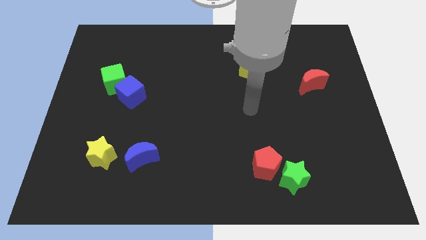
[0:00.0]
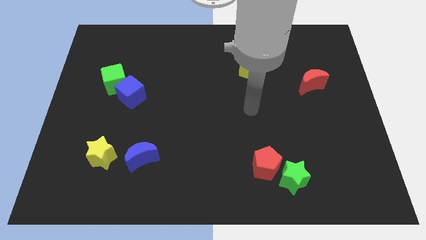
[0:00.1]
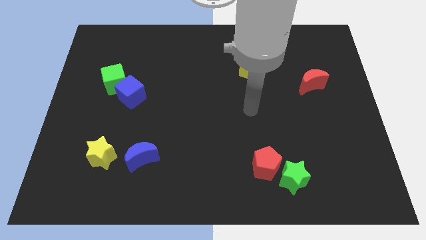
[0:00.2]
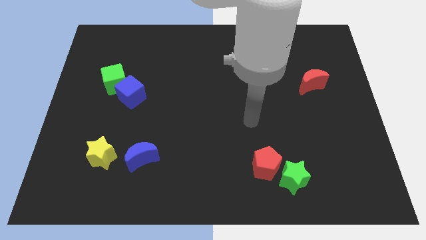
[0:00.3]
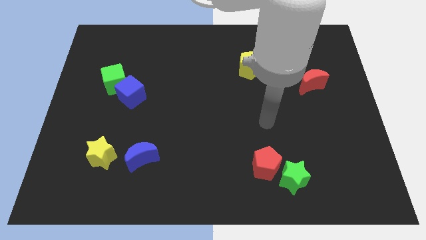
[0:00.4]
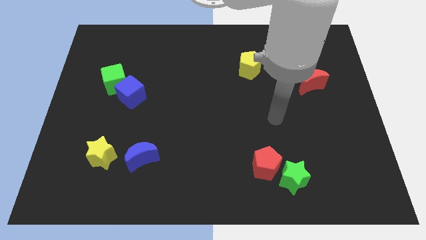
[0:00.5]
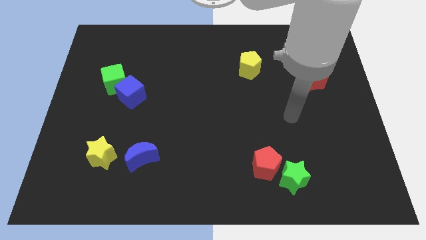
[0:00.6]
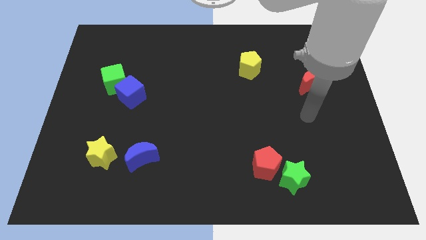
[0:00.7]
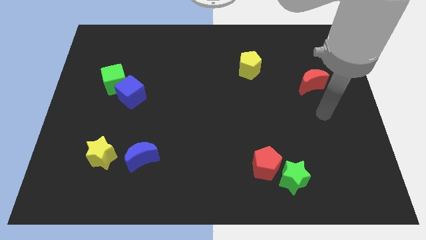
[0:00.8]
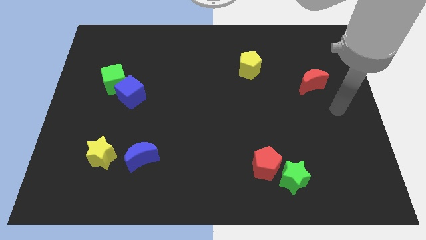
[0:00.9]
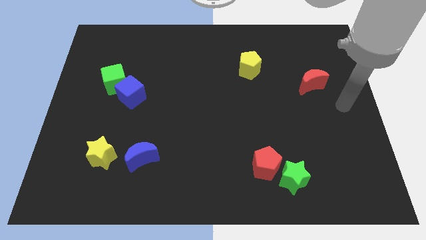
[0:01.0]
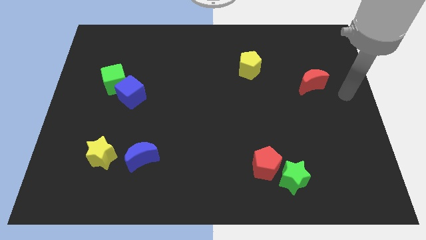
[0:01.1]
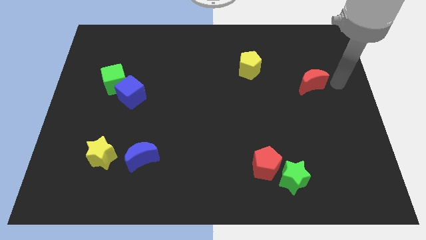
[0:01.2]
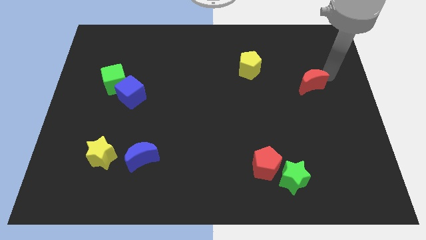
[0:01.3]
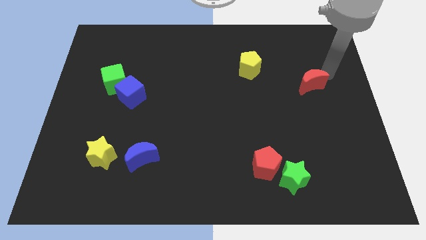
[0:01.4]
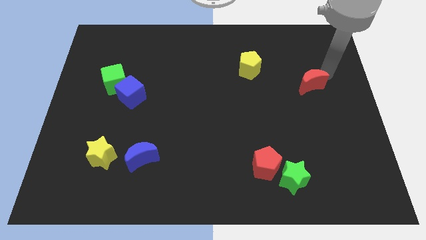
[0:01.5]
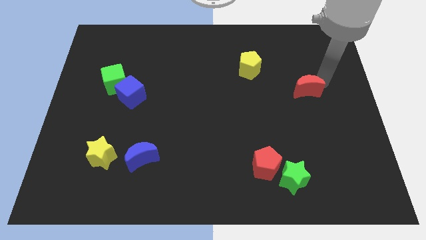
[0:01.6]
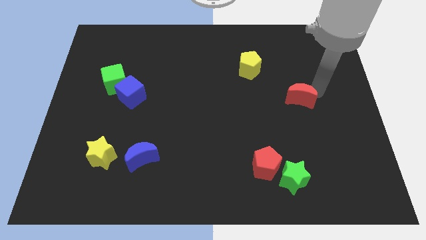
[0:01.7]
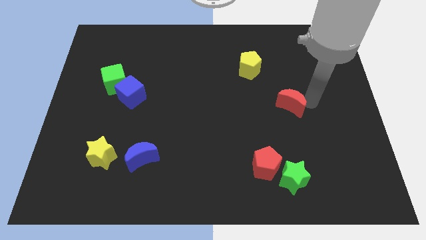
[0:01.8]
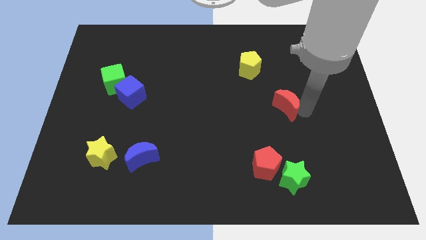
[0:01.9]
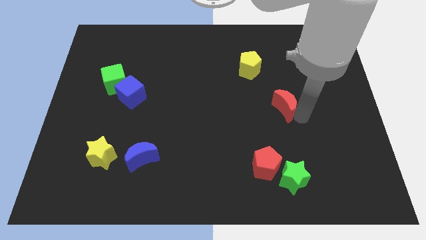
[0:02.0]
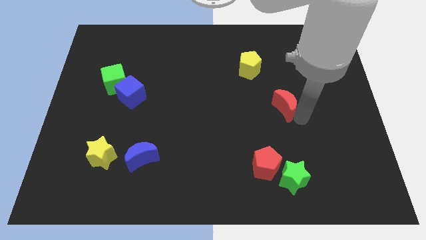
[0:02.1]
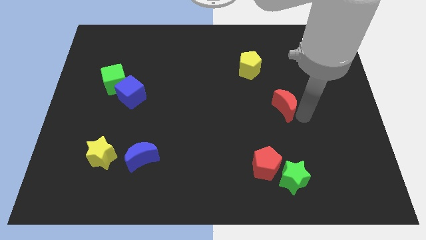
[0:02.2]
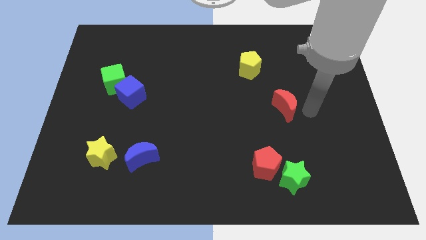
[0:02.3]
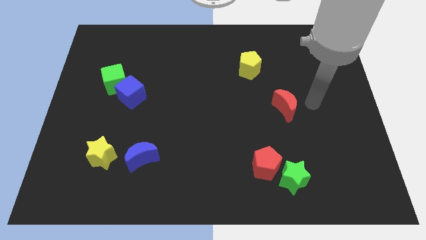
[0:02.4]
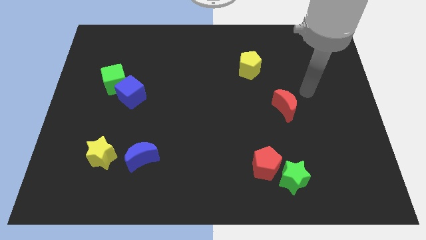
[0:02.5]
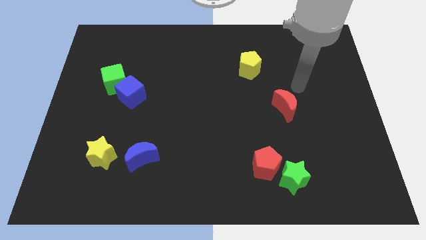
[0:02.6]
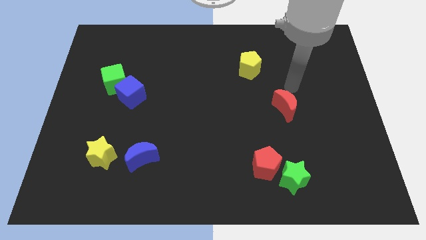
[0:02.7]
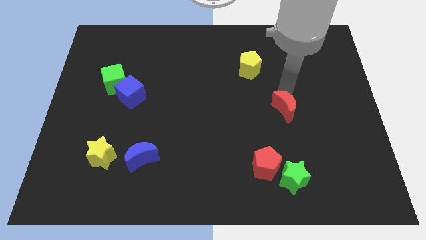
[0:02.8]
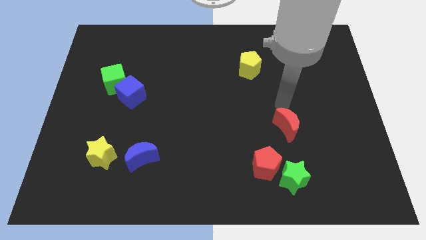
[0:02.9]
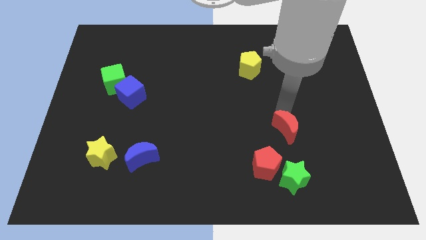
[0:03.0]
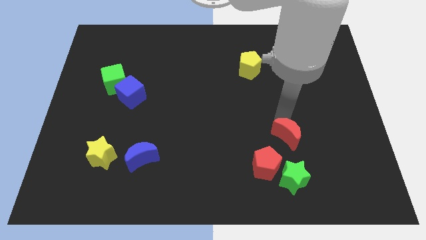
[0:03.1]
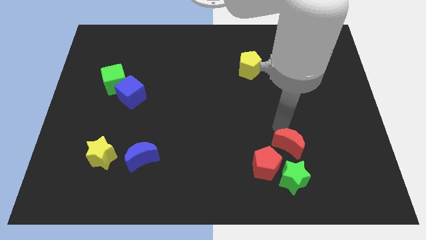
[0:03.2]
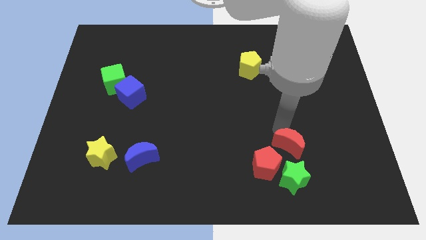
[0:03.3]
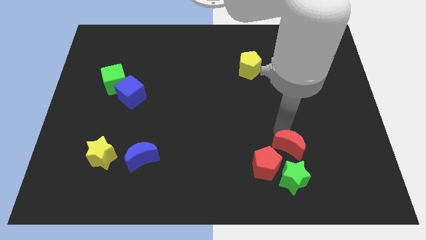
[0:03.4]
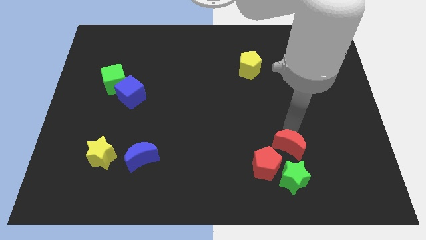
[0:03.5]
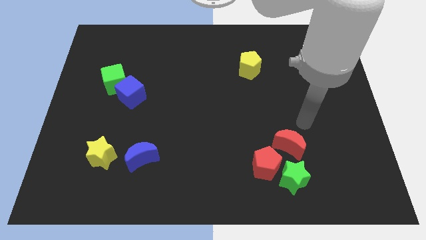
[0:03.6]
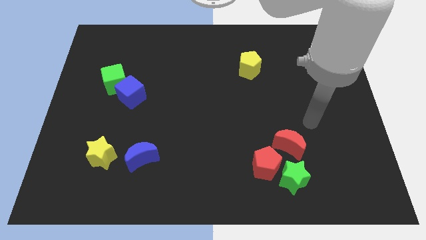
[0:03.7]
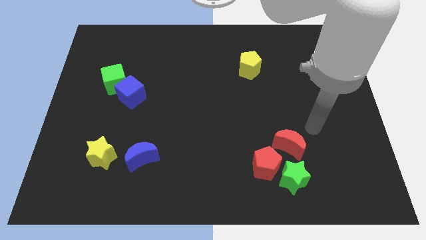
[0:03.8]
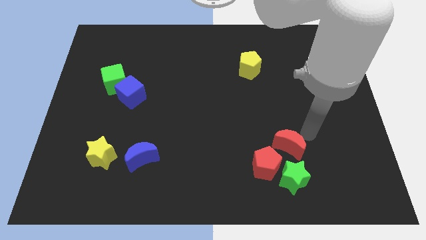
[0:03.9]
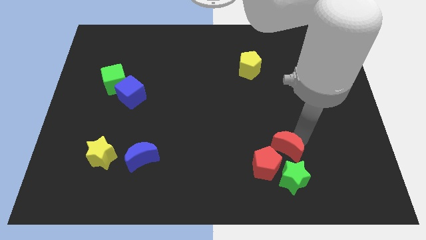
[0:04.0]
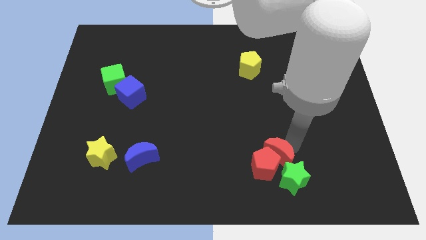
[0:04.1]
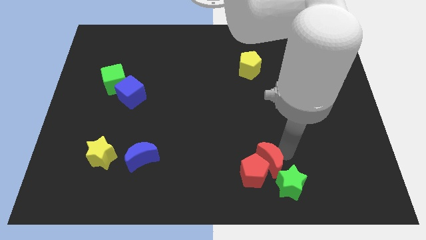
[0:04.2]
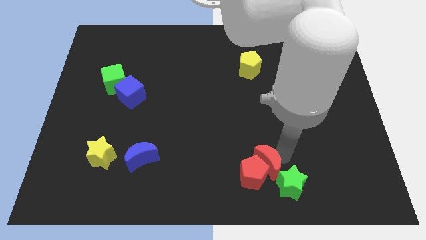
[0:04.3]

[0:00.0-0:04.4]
push the red moon into the red pentagon

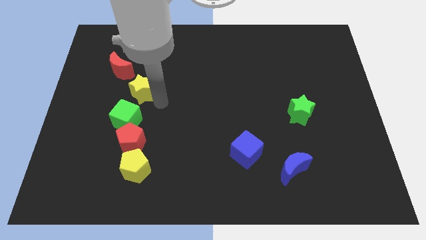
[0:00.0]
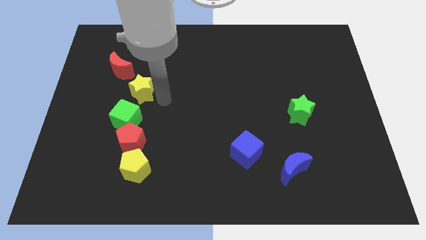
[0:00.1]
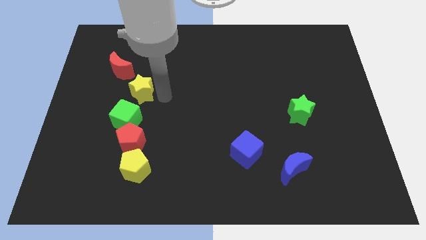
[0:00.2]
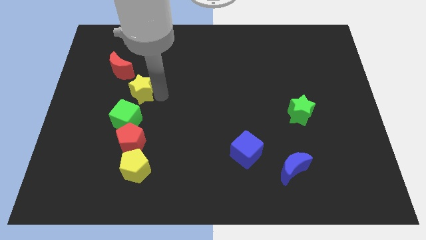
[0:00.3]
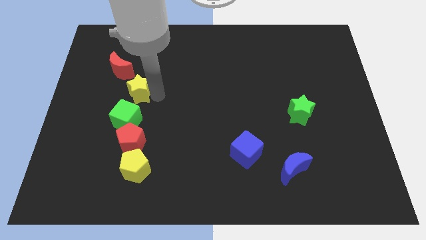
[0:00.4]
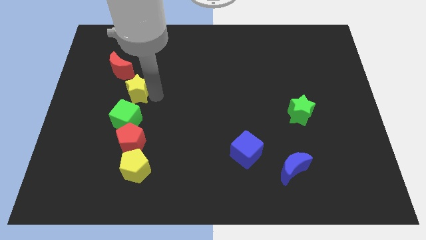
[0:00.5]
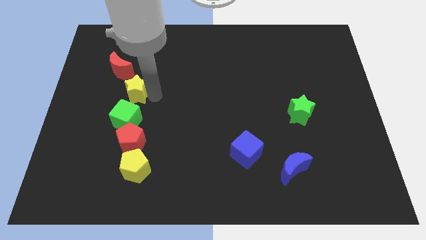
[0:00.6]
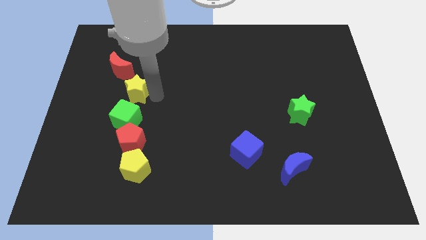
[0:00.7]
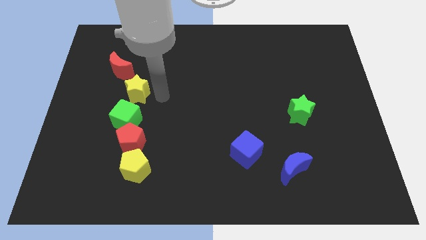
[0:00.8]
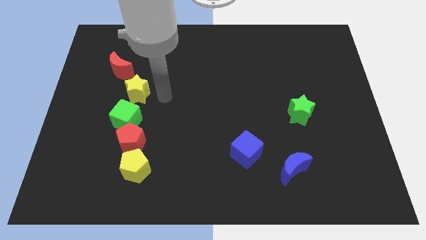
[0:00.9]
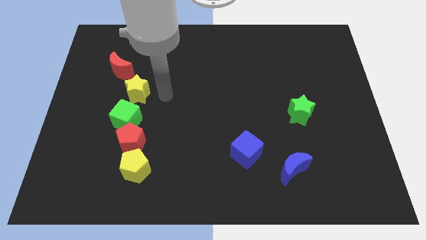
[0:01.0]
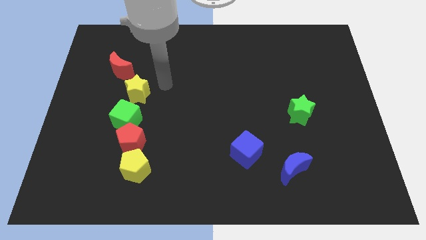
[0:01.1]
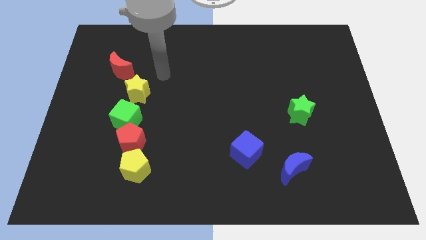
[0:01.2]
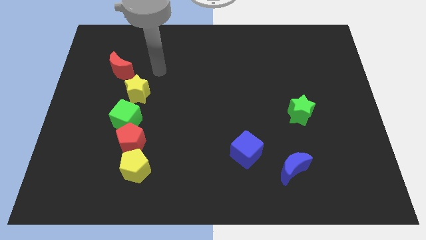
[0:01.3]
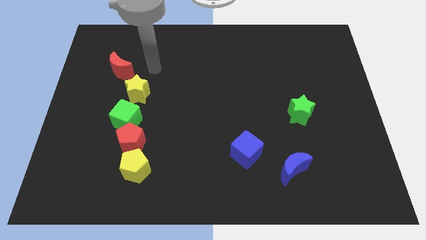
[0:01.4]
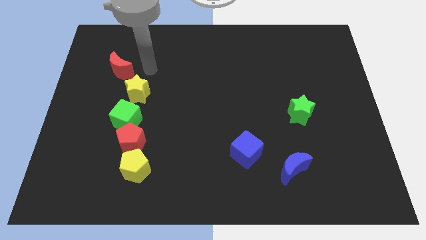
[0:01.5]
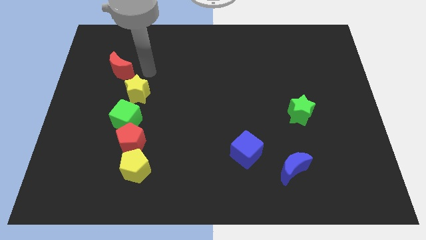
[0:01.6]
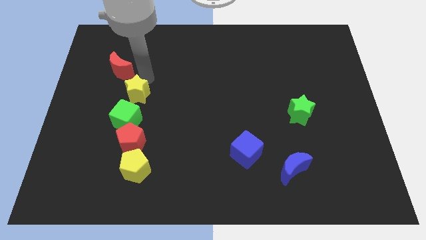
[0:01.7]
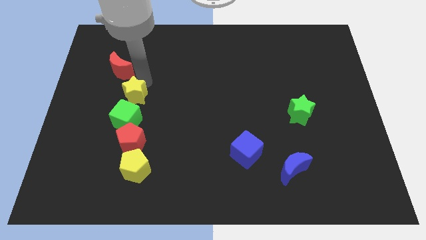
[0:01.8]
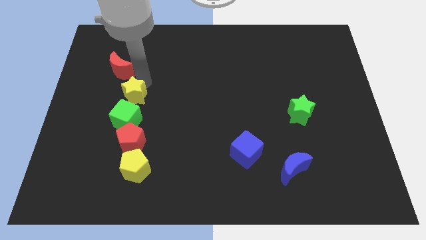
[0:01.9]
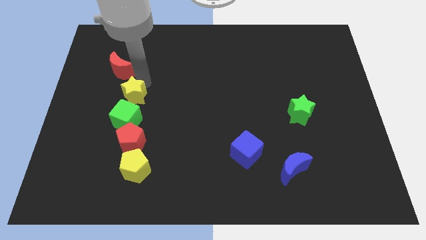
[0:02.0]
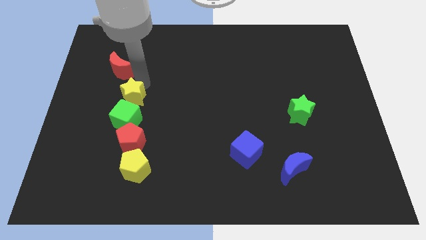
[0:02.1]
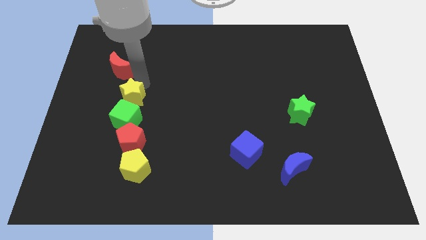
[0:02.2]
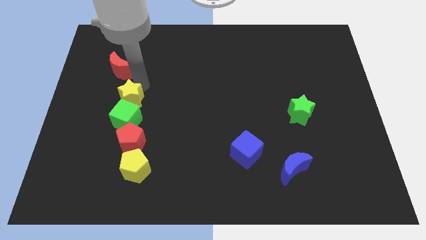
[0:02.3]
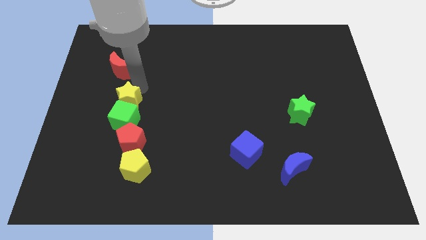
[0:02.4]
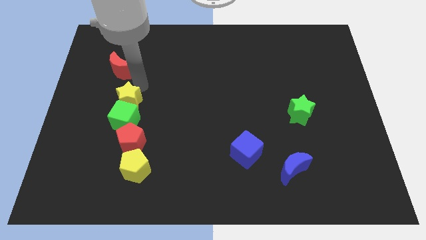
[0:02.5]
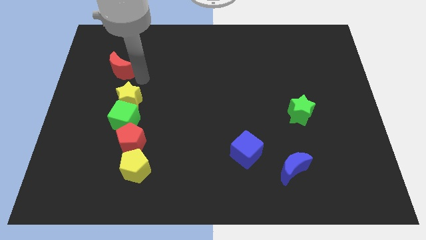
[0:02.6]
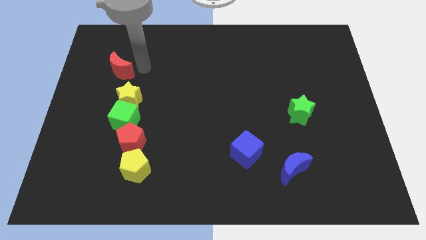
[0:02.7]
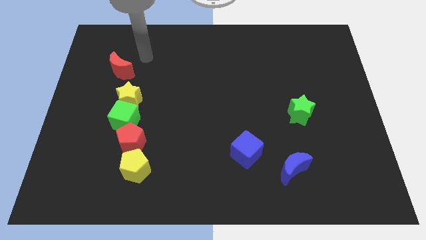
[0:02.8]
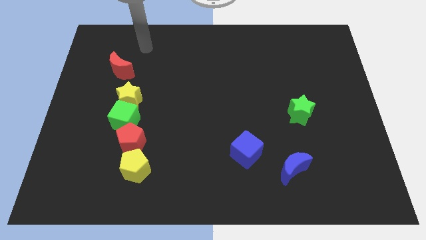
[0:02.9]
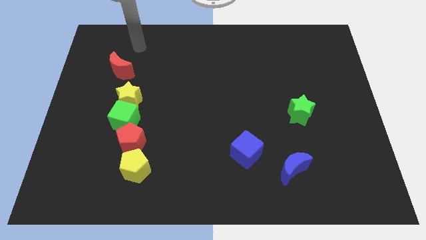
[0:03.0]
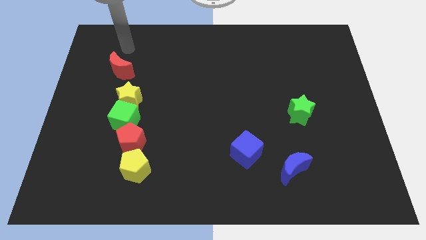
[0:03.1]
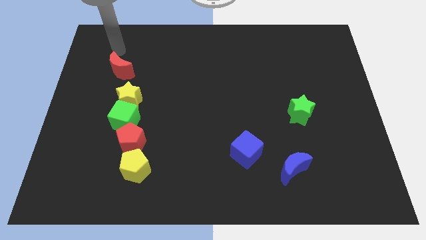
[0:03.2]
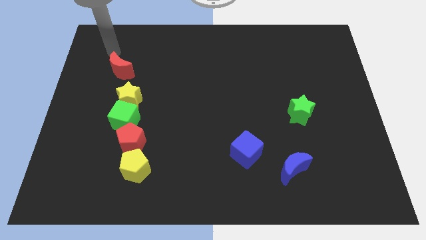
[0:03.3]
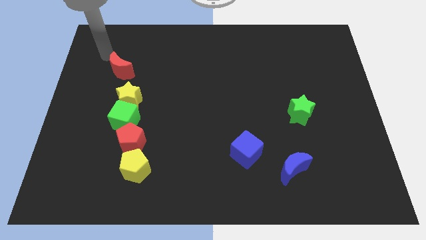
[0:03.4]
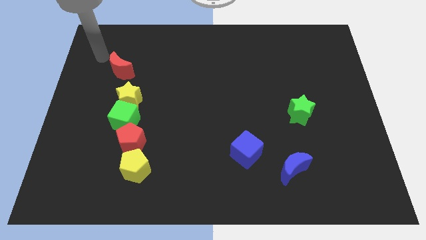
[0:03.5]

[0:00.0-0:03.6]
push the yellow star into the green cube

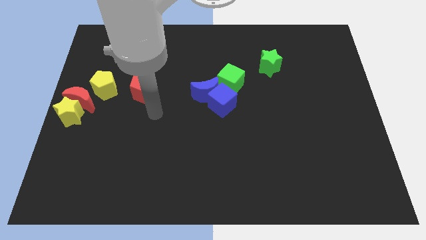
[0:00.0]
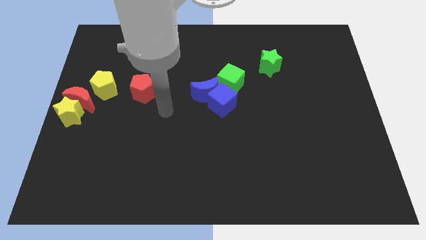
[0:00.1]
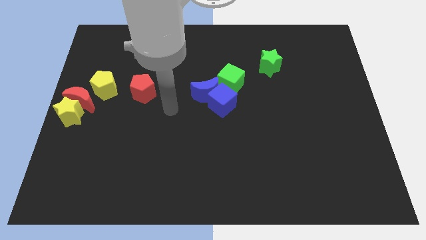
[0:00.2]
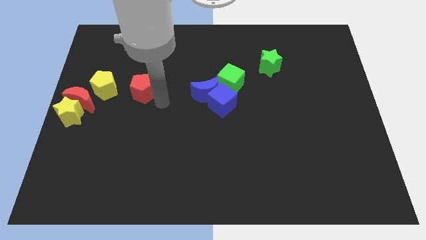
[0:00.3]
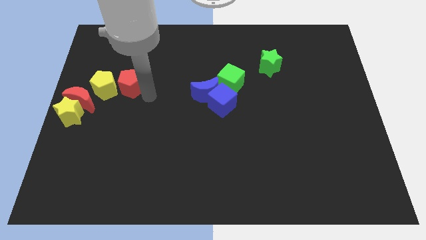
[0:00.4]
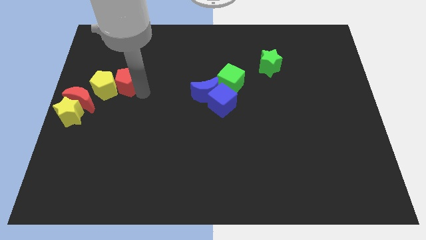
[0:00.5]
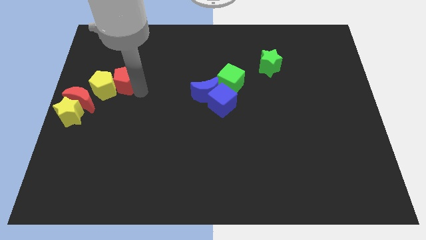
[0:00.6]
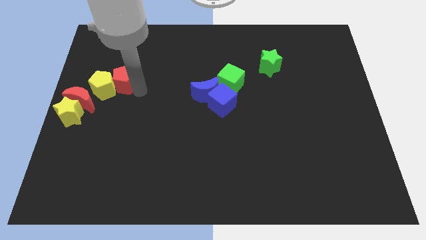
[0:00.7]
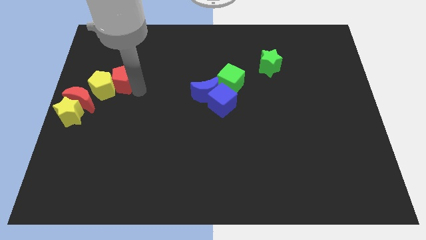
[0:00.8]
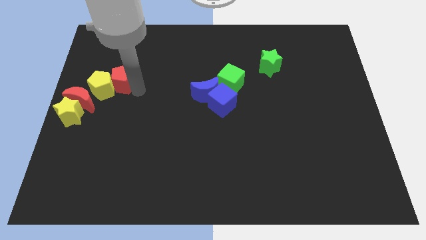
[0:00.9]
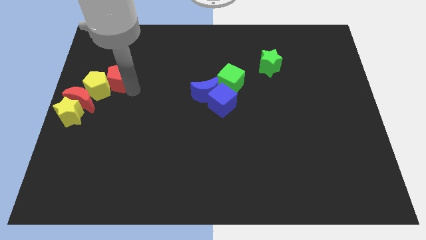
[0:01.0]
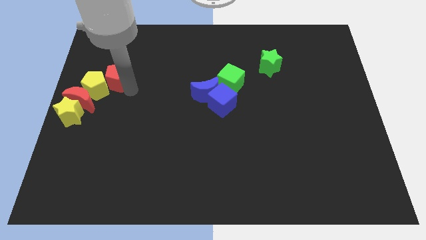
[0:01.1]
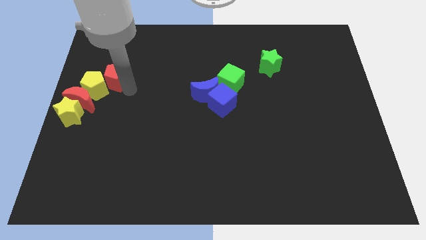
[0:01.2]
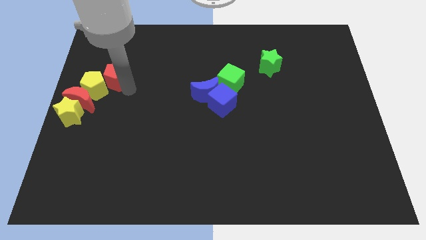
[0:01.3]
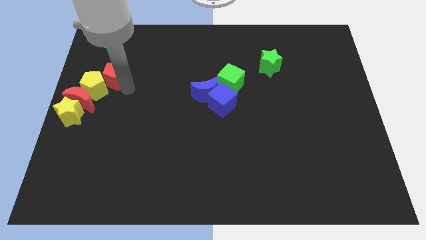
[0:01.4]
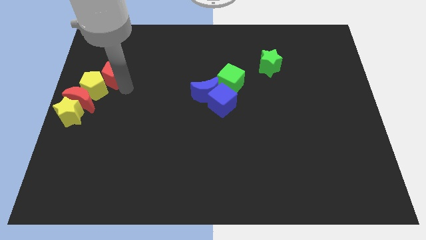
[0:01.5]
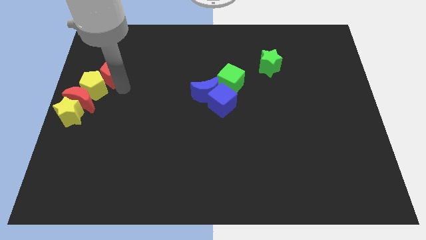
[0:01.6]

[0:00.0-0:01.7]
move red pentagon along with yellow pentagon to the top of the red crescent
